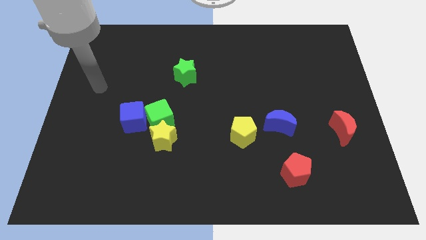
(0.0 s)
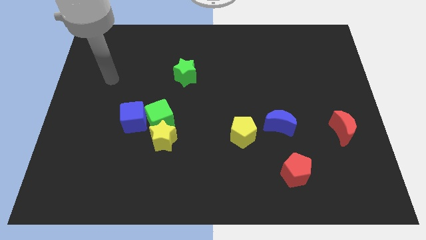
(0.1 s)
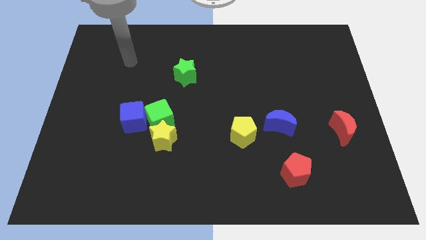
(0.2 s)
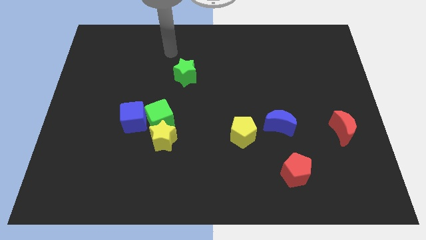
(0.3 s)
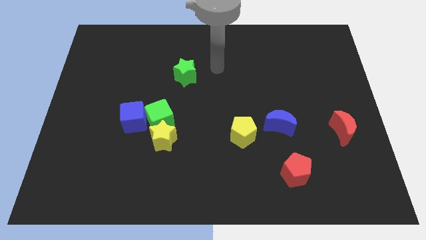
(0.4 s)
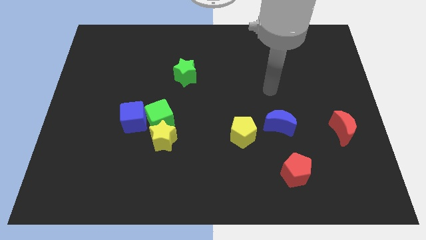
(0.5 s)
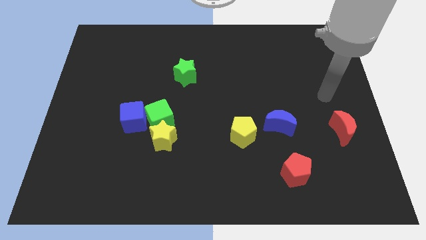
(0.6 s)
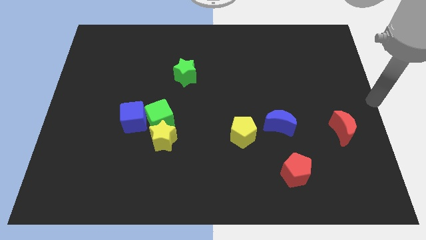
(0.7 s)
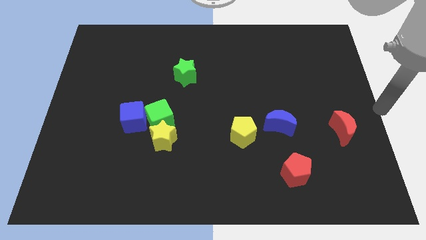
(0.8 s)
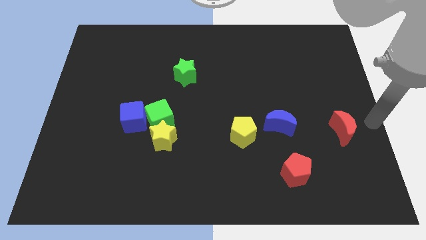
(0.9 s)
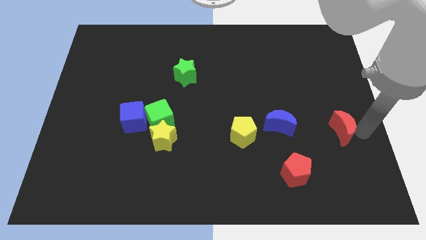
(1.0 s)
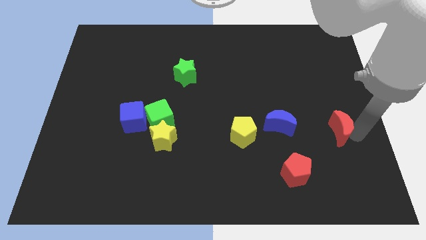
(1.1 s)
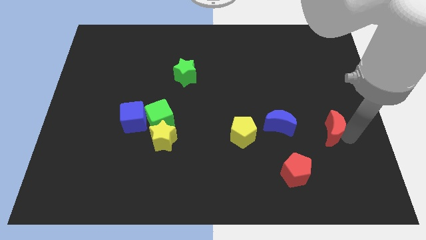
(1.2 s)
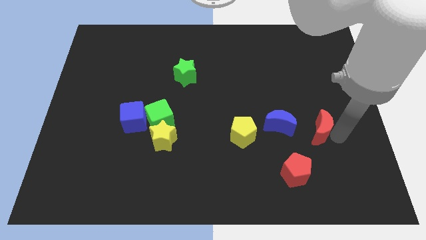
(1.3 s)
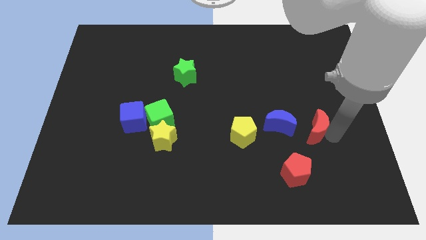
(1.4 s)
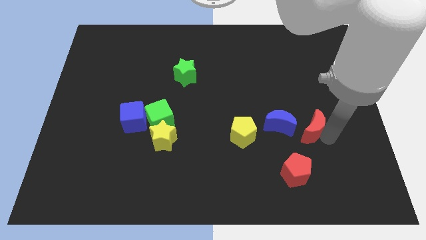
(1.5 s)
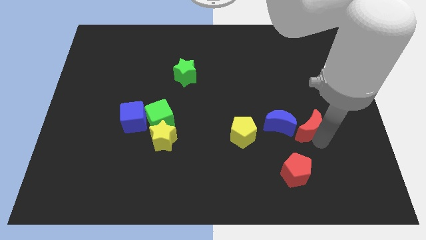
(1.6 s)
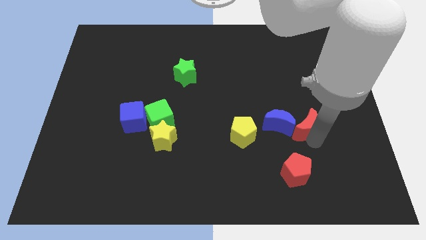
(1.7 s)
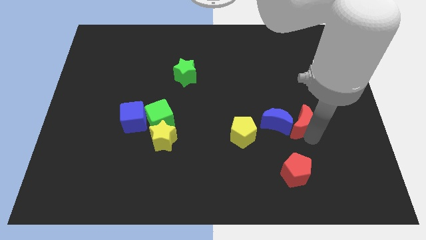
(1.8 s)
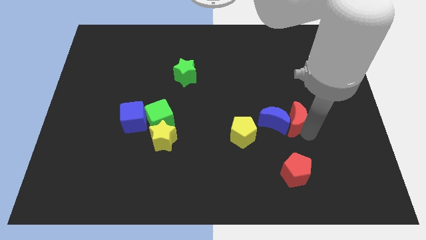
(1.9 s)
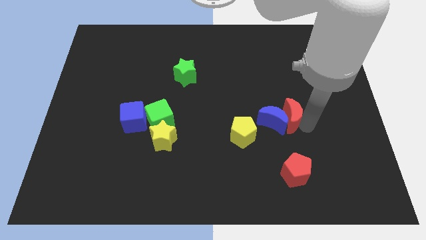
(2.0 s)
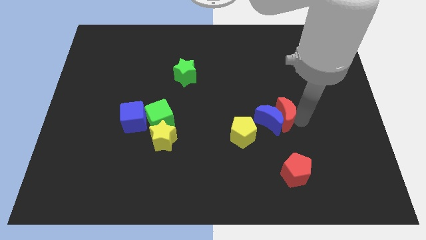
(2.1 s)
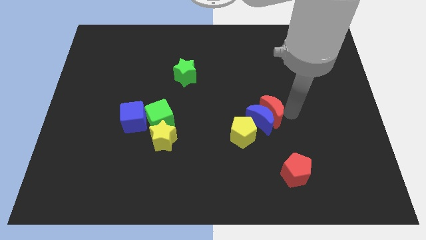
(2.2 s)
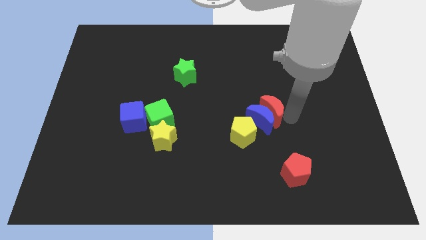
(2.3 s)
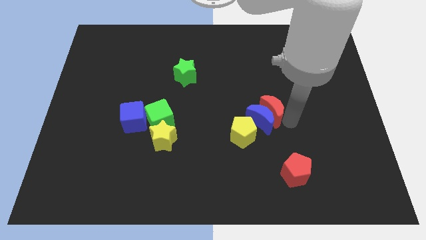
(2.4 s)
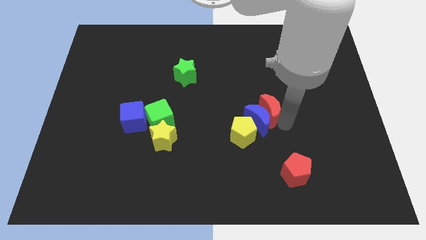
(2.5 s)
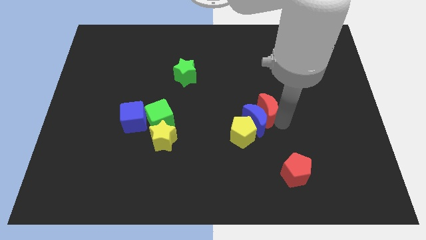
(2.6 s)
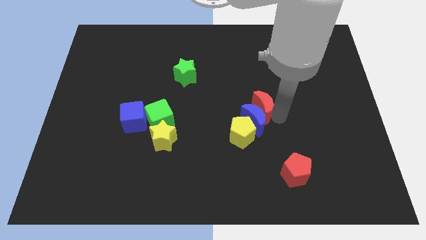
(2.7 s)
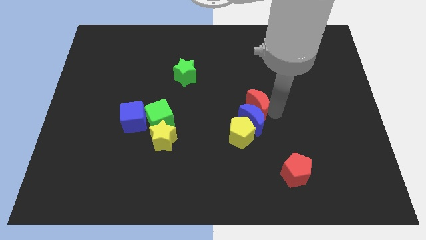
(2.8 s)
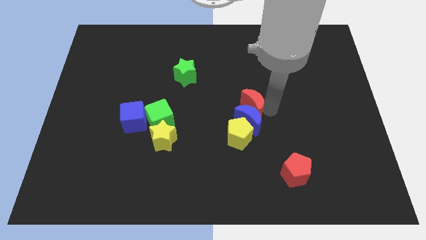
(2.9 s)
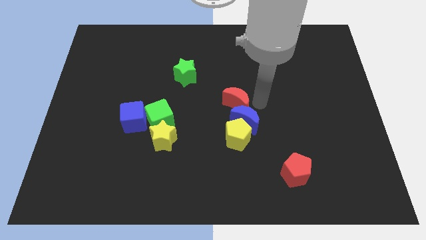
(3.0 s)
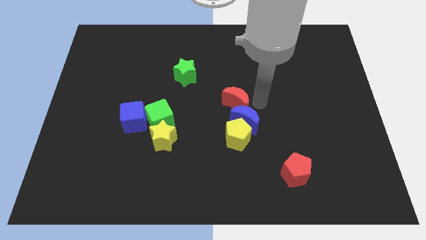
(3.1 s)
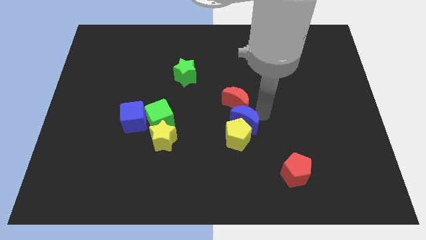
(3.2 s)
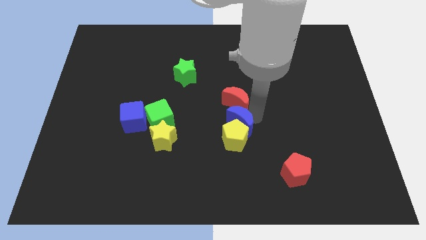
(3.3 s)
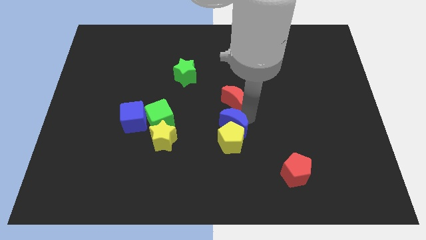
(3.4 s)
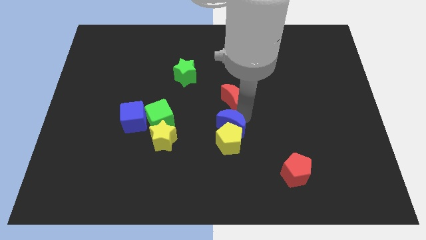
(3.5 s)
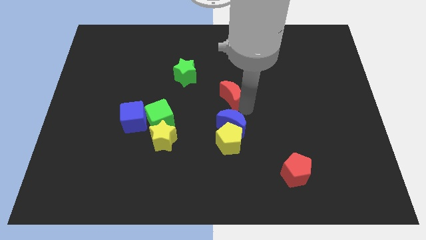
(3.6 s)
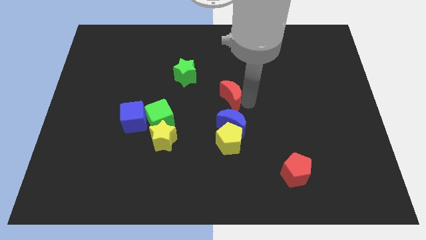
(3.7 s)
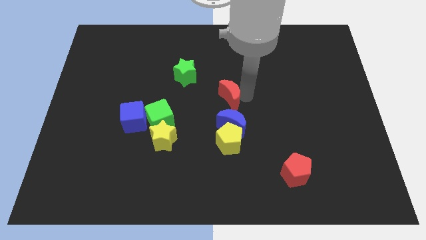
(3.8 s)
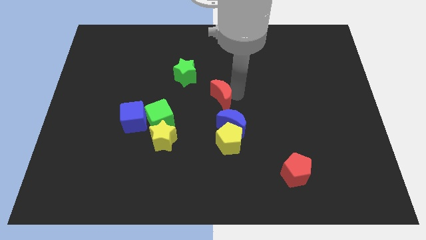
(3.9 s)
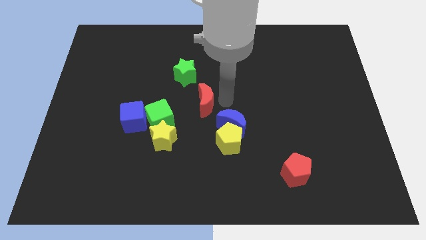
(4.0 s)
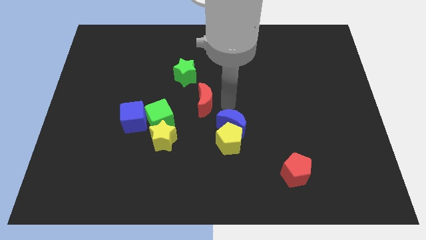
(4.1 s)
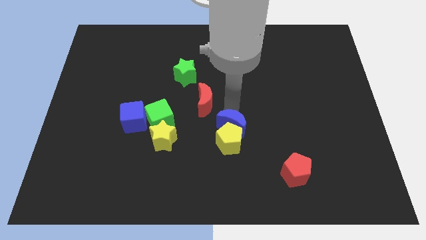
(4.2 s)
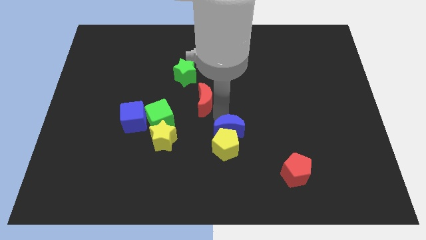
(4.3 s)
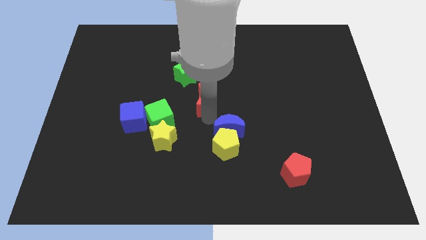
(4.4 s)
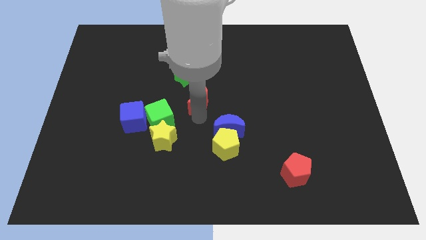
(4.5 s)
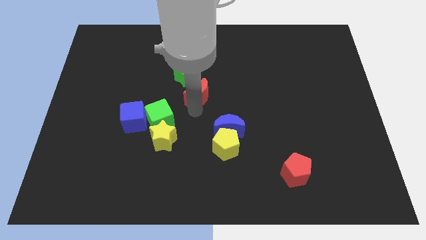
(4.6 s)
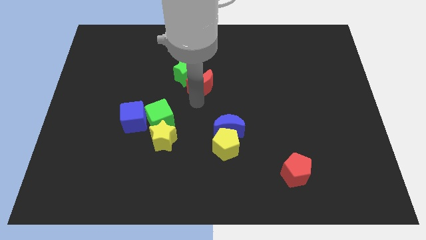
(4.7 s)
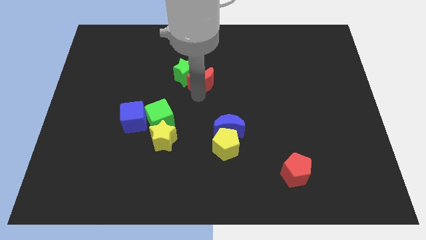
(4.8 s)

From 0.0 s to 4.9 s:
put the red moon towards the green star

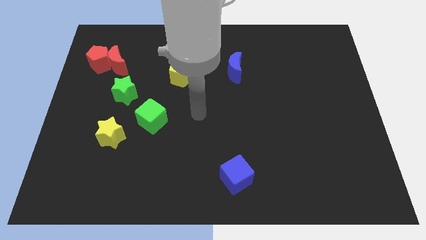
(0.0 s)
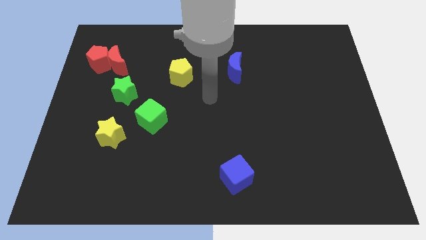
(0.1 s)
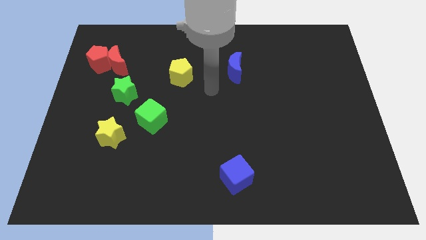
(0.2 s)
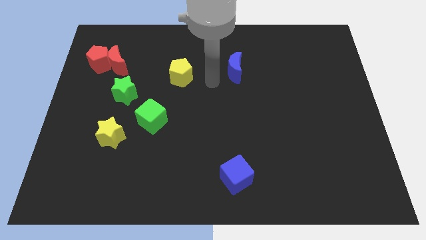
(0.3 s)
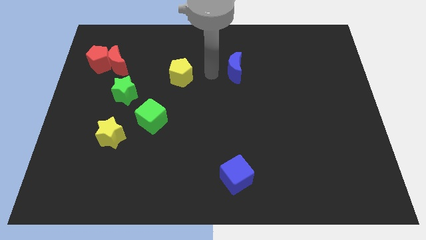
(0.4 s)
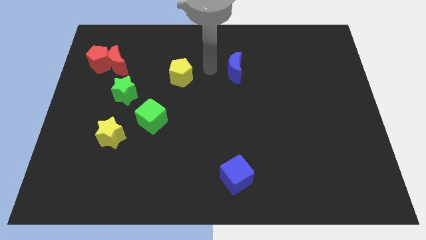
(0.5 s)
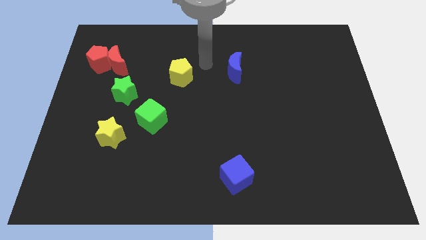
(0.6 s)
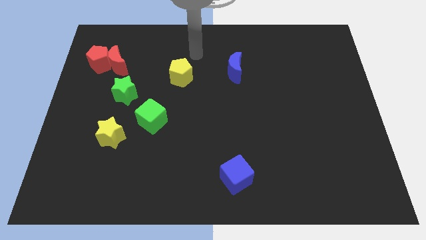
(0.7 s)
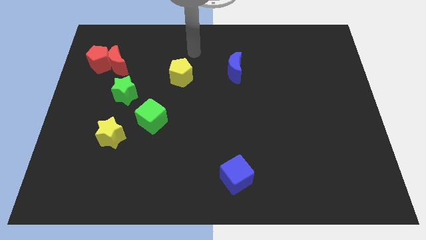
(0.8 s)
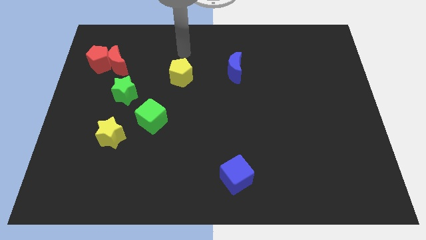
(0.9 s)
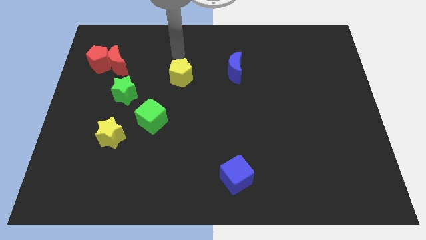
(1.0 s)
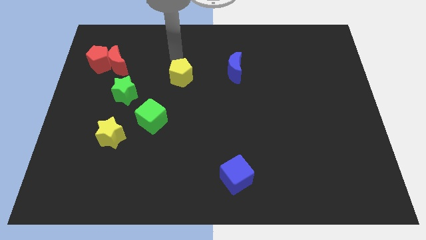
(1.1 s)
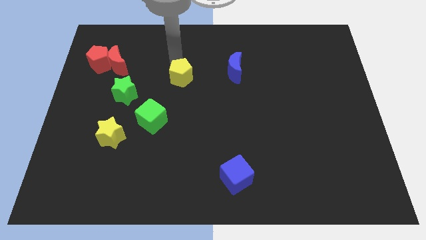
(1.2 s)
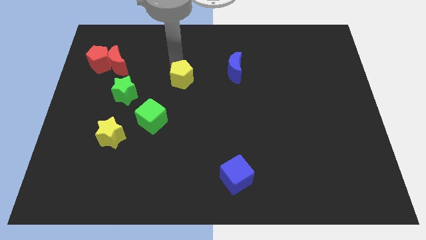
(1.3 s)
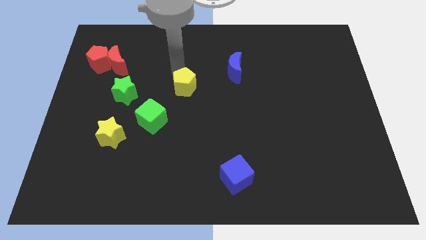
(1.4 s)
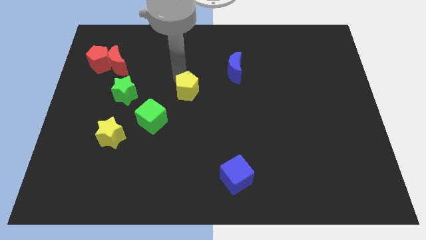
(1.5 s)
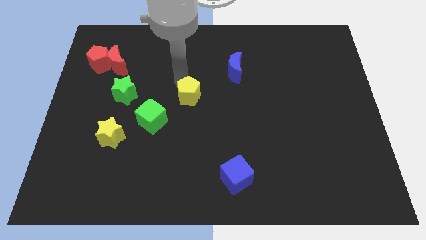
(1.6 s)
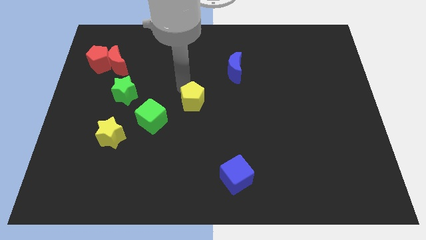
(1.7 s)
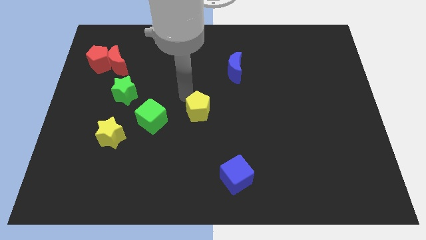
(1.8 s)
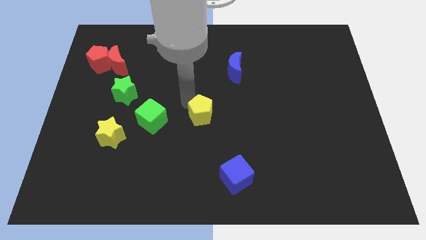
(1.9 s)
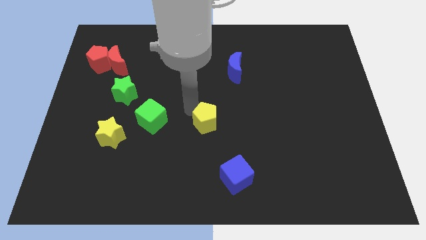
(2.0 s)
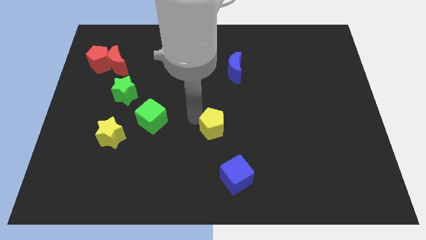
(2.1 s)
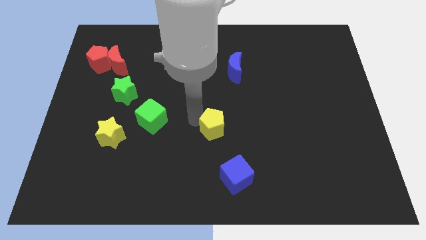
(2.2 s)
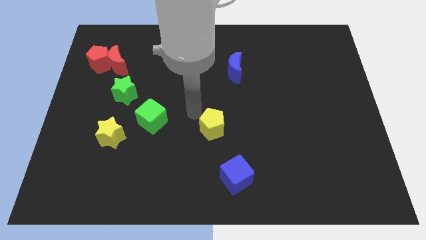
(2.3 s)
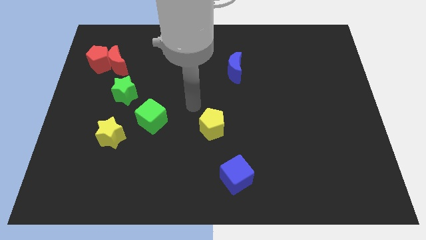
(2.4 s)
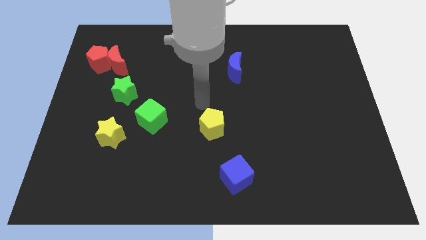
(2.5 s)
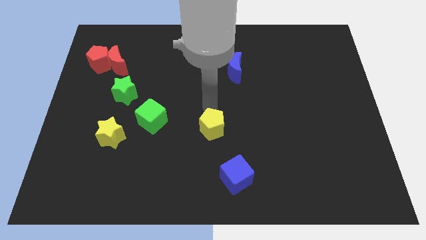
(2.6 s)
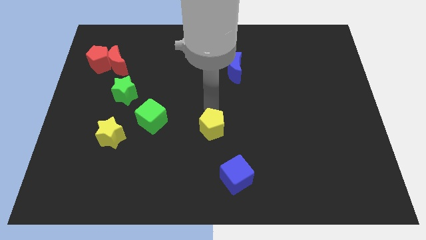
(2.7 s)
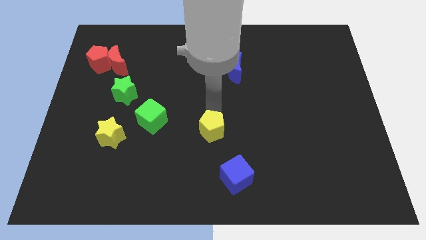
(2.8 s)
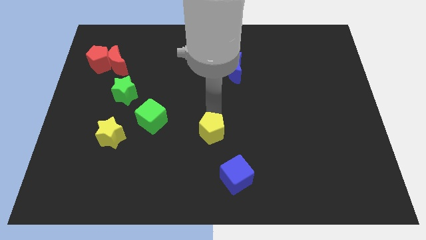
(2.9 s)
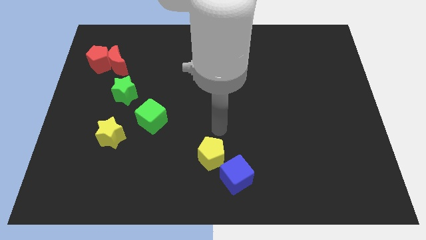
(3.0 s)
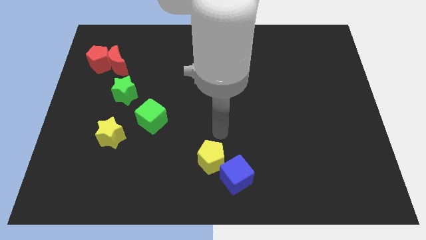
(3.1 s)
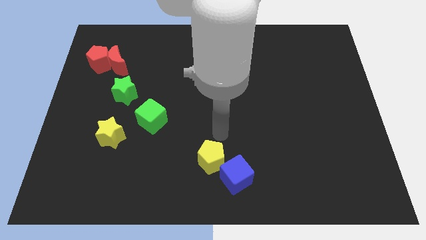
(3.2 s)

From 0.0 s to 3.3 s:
move the yellow pentagon next to the blue cube

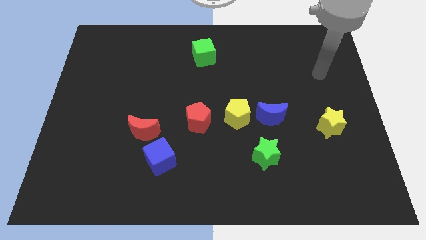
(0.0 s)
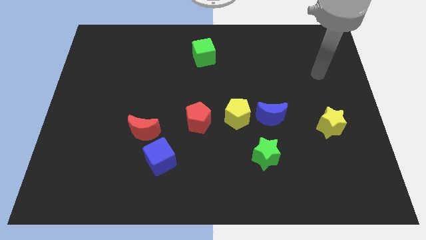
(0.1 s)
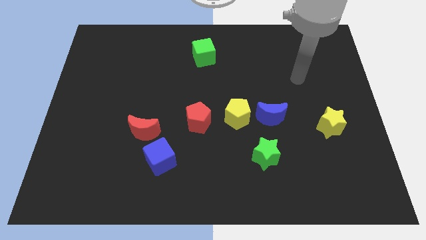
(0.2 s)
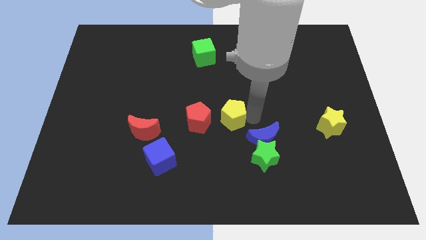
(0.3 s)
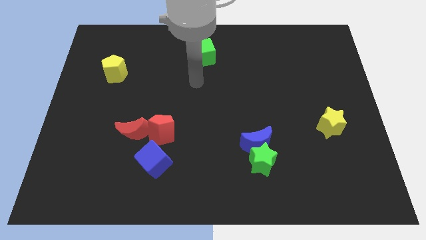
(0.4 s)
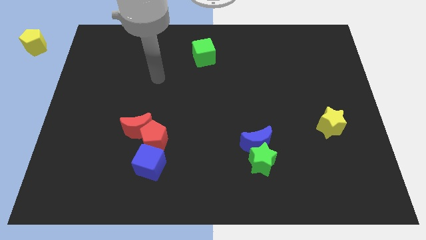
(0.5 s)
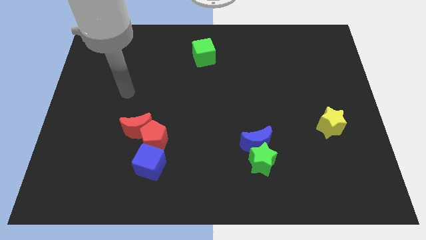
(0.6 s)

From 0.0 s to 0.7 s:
move the blue cube towards the red pentagon
